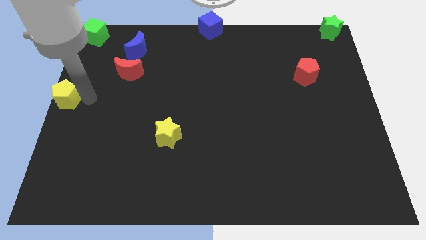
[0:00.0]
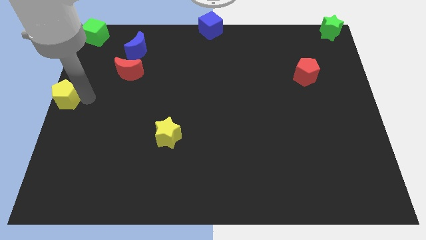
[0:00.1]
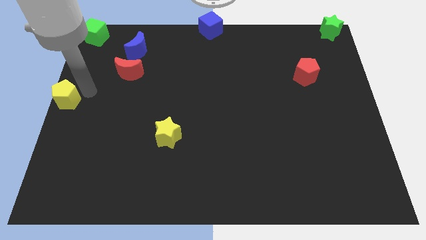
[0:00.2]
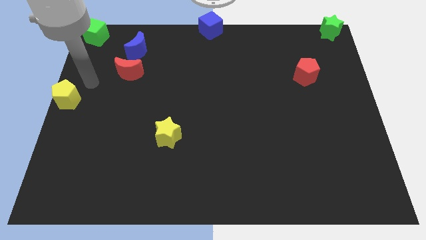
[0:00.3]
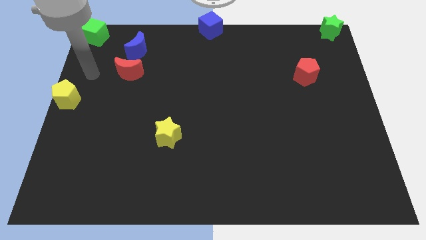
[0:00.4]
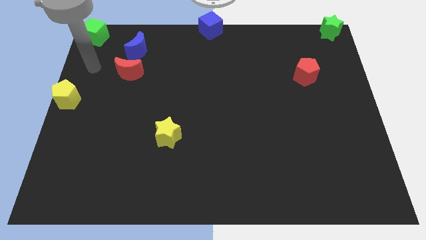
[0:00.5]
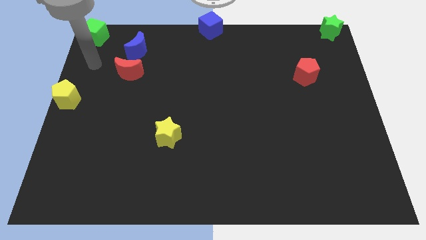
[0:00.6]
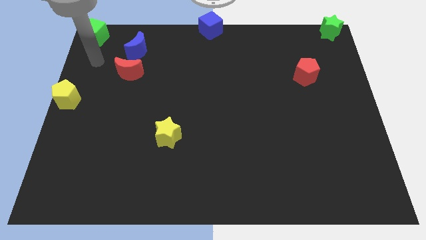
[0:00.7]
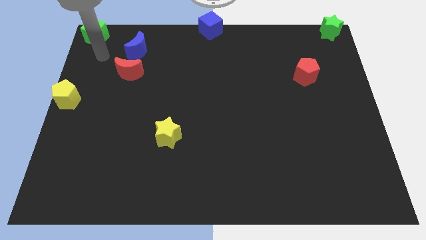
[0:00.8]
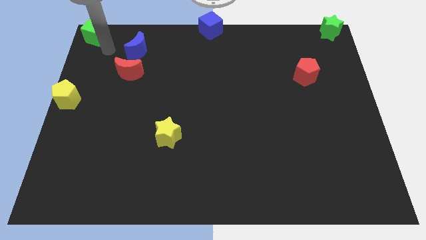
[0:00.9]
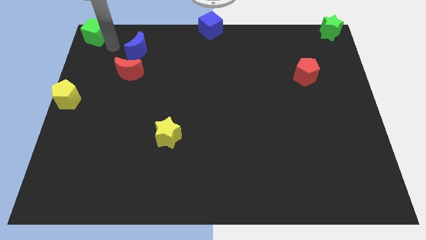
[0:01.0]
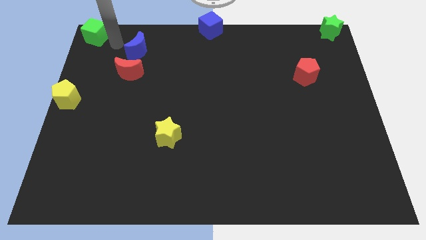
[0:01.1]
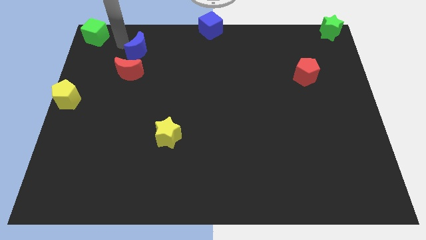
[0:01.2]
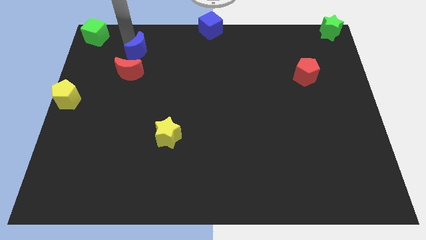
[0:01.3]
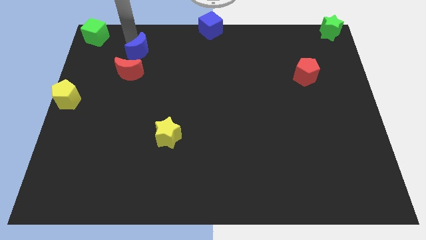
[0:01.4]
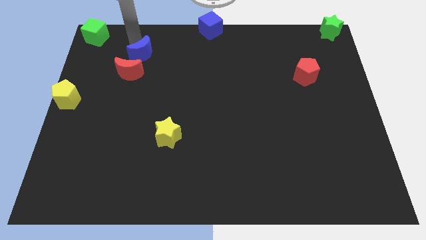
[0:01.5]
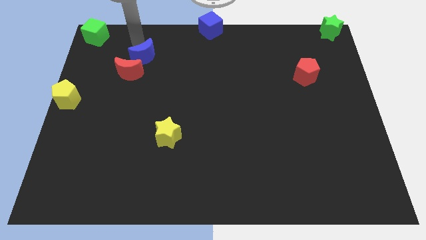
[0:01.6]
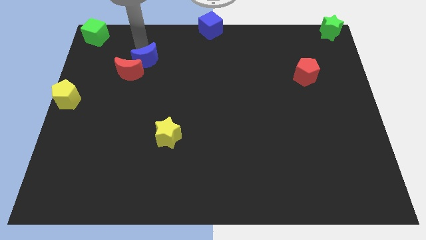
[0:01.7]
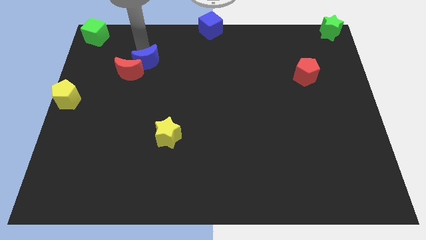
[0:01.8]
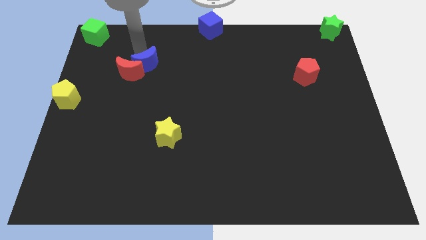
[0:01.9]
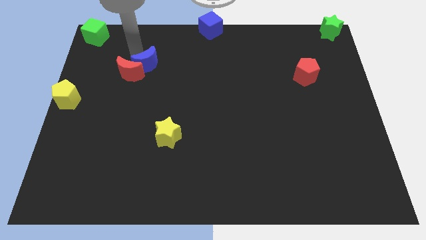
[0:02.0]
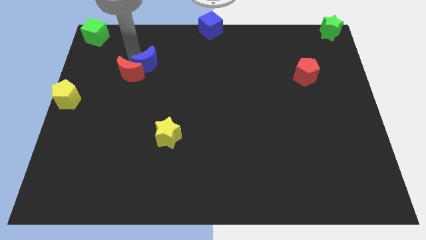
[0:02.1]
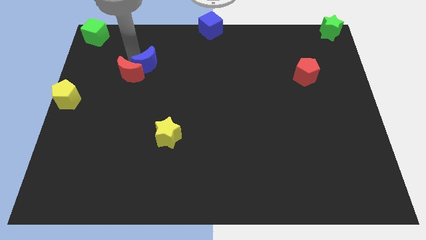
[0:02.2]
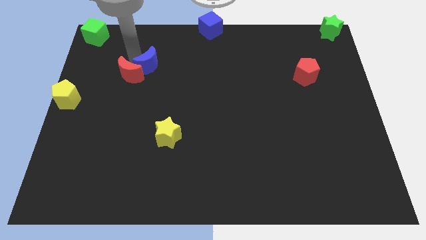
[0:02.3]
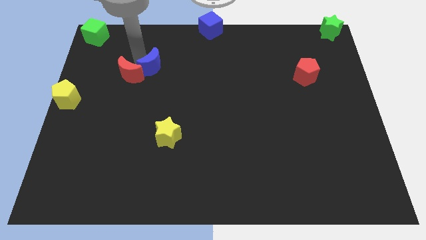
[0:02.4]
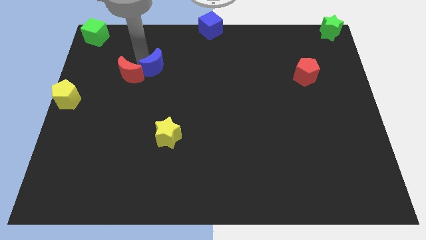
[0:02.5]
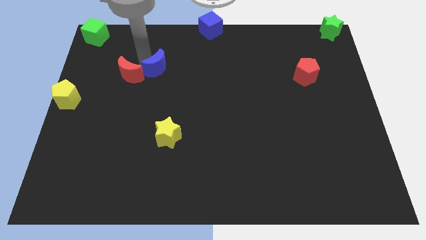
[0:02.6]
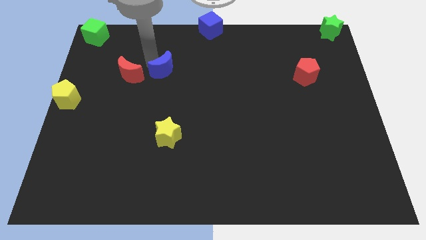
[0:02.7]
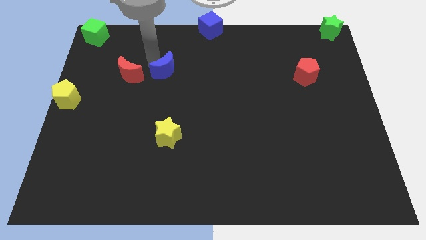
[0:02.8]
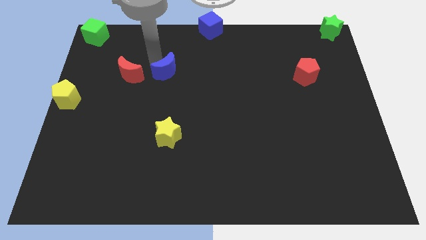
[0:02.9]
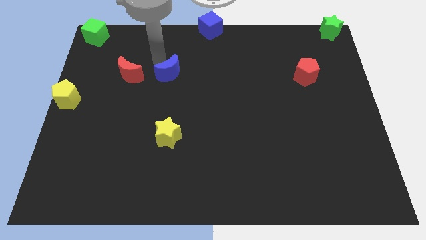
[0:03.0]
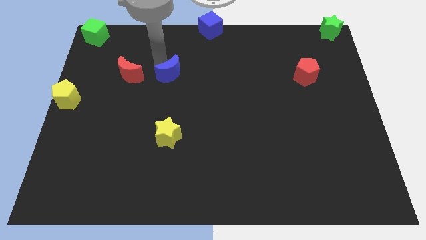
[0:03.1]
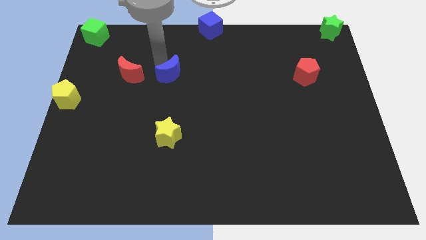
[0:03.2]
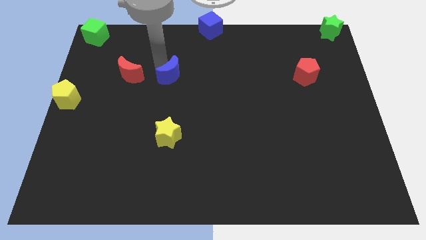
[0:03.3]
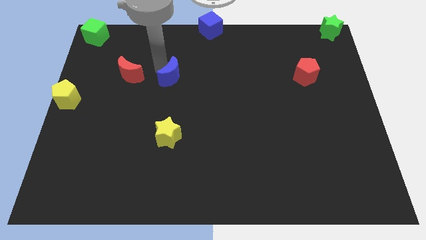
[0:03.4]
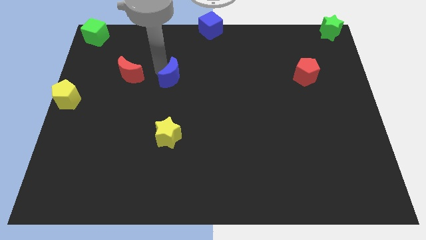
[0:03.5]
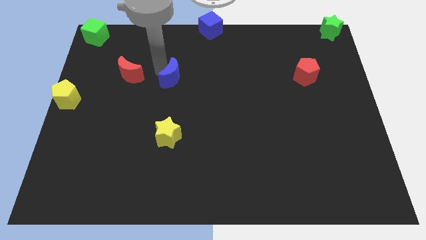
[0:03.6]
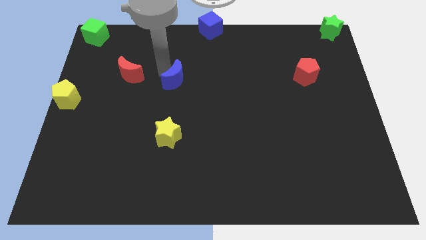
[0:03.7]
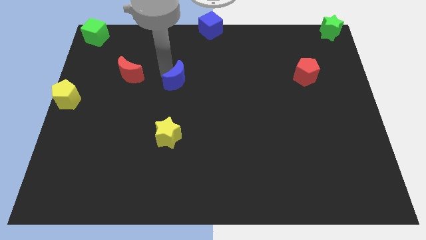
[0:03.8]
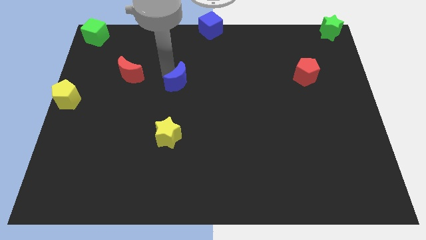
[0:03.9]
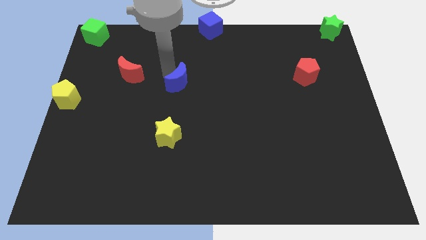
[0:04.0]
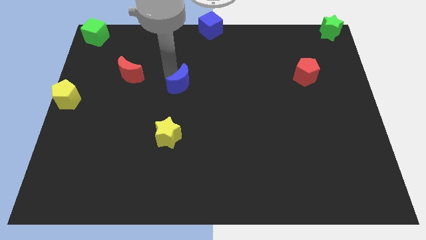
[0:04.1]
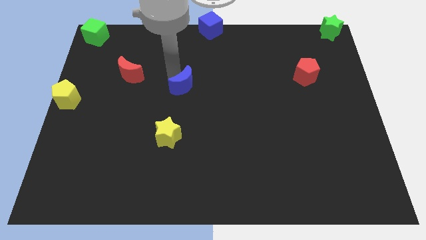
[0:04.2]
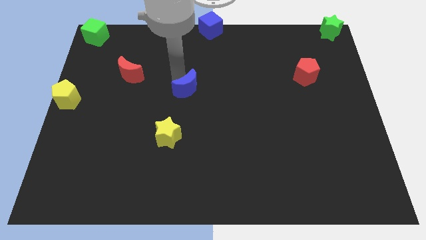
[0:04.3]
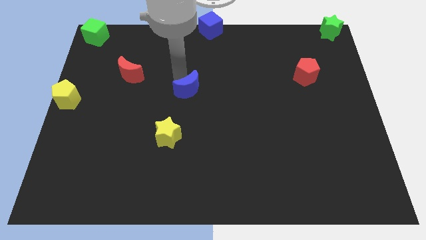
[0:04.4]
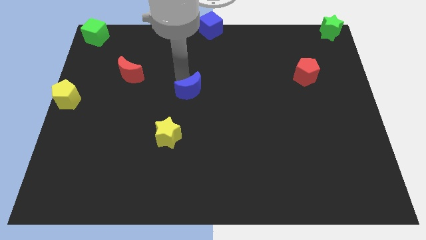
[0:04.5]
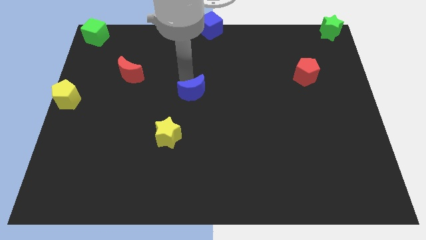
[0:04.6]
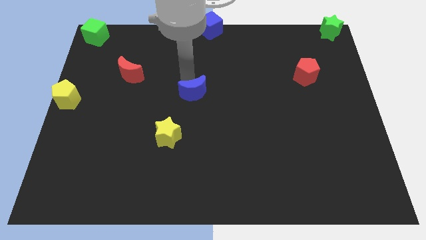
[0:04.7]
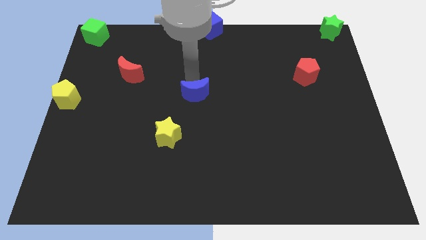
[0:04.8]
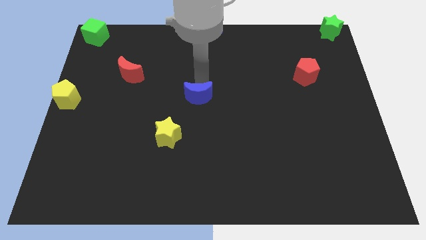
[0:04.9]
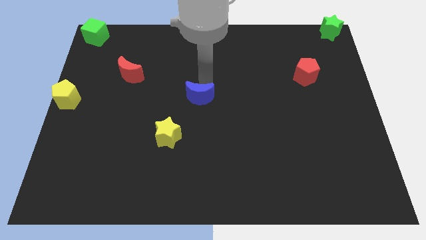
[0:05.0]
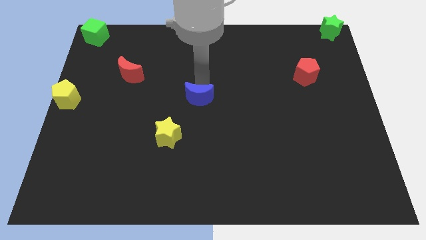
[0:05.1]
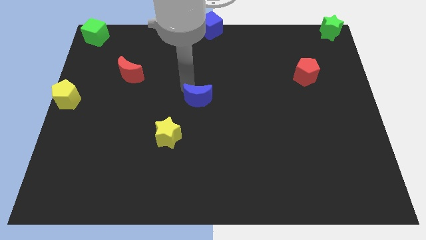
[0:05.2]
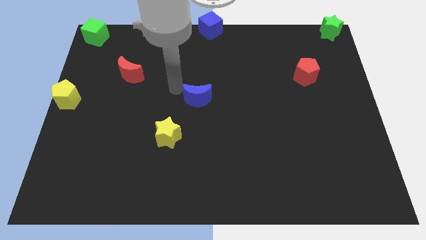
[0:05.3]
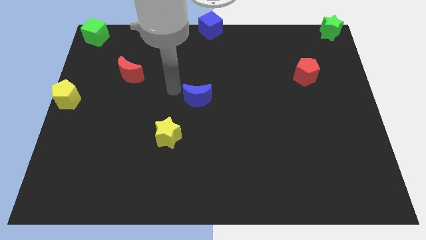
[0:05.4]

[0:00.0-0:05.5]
move blue moon to the middle of the board

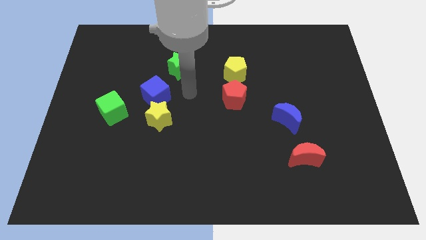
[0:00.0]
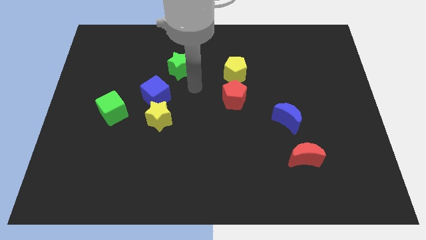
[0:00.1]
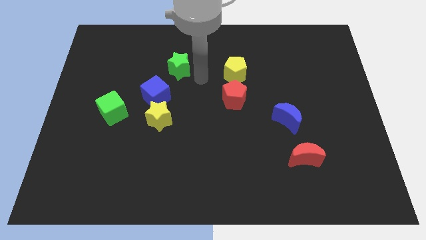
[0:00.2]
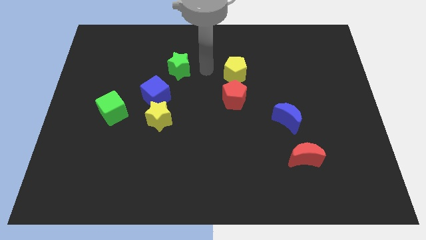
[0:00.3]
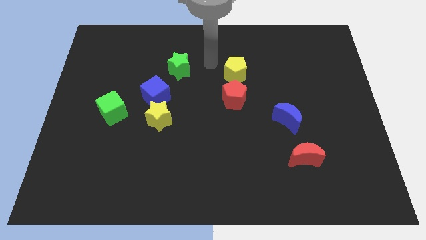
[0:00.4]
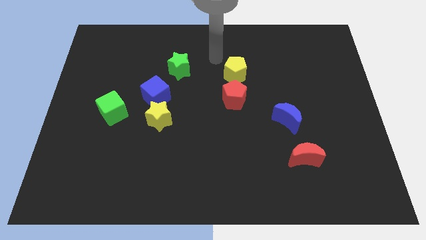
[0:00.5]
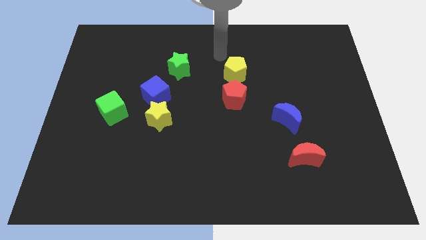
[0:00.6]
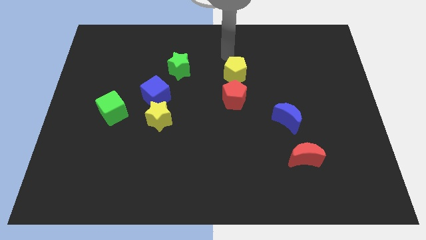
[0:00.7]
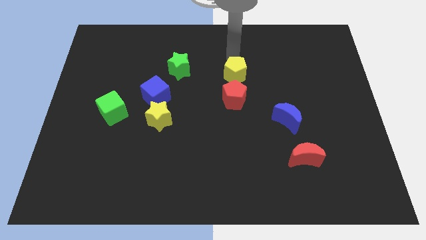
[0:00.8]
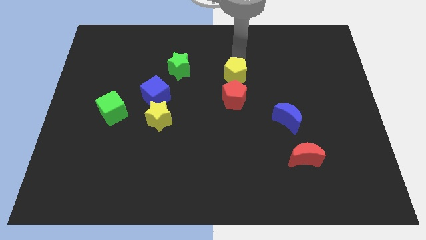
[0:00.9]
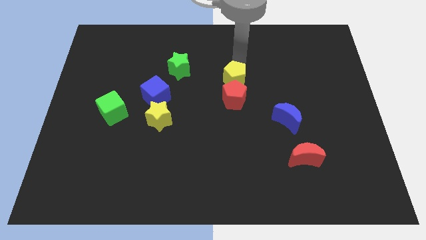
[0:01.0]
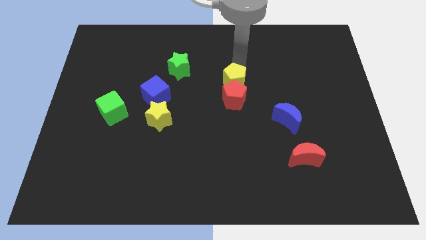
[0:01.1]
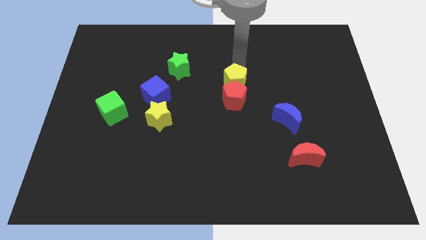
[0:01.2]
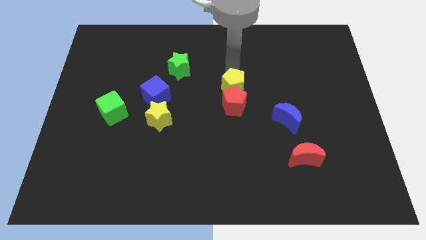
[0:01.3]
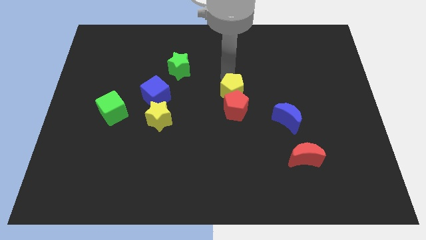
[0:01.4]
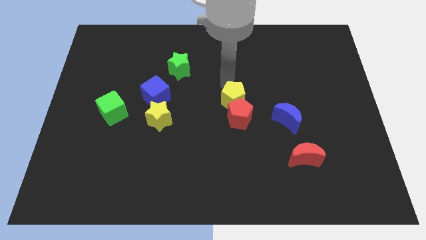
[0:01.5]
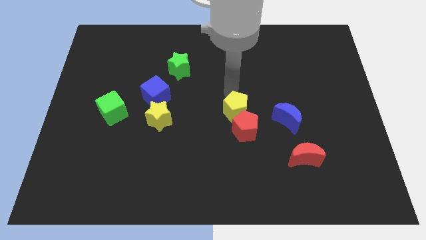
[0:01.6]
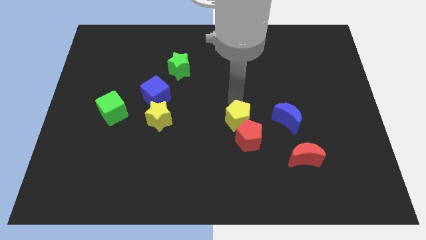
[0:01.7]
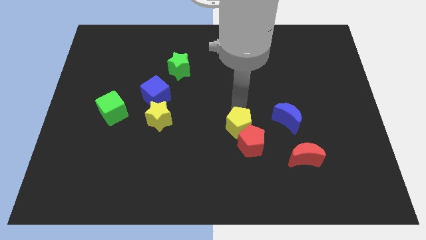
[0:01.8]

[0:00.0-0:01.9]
push both pentagons together towards bottom of the board

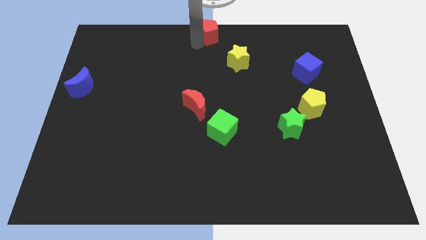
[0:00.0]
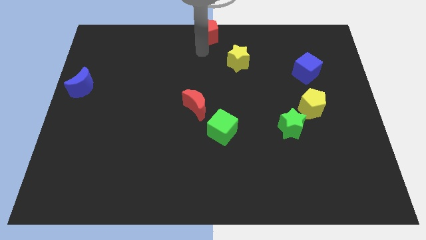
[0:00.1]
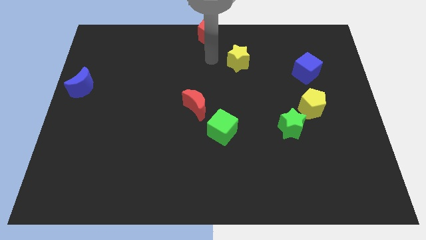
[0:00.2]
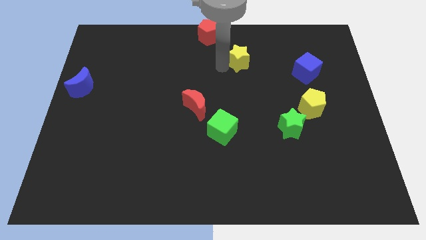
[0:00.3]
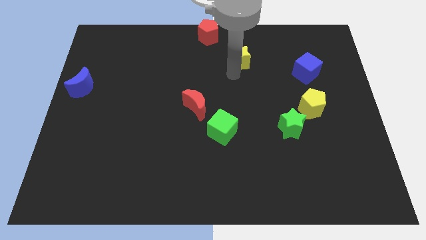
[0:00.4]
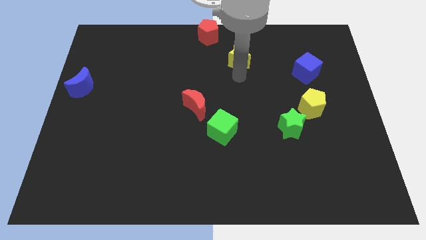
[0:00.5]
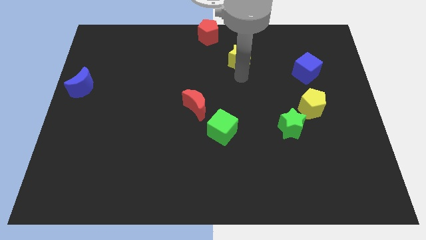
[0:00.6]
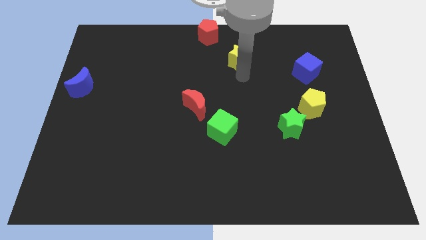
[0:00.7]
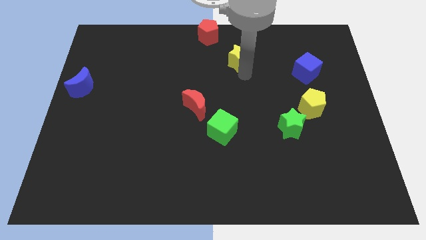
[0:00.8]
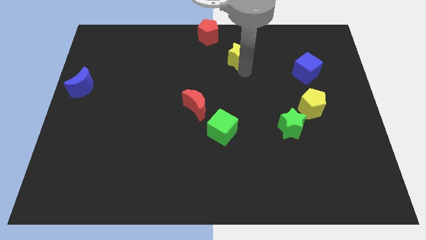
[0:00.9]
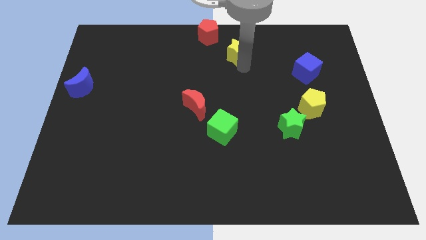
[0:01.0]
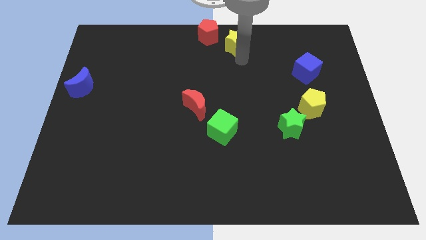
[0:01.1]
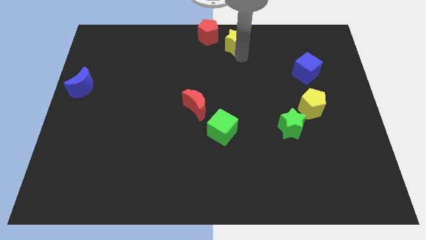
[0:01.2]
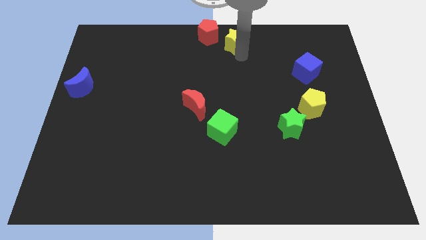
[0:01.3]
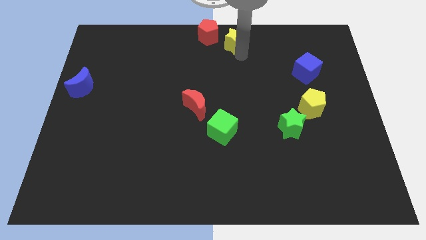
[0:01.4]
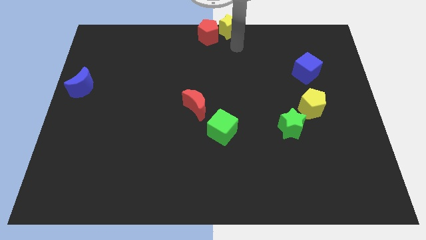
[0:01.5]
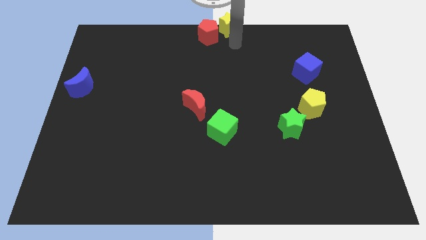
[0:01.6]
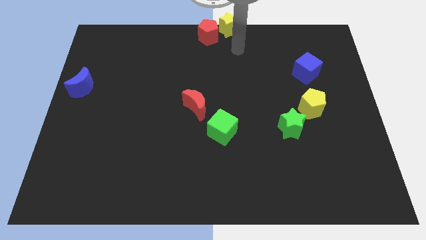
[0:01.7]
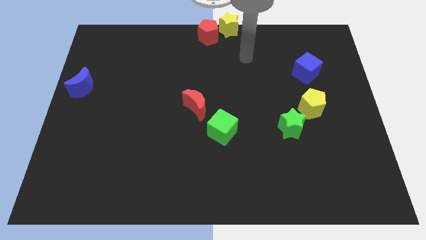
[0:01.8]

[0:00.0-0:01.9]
put the yellow star to the right side of red pentagon
